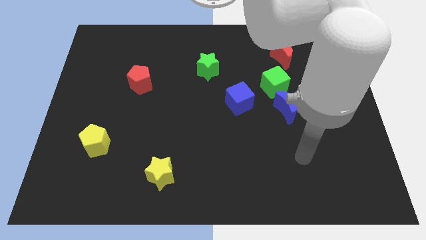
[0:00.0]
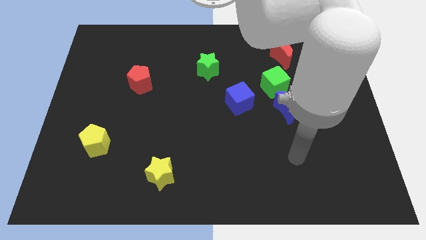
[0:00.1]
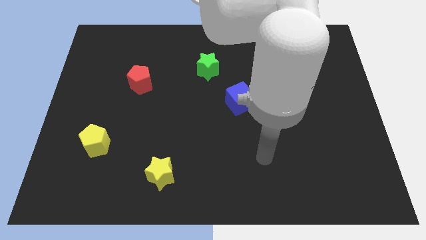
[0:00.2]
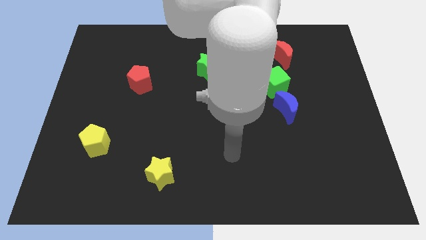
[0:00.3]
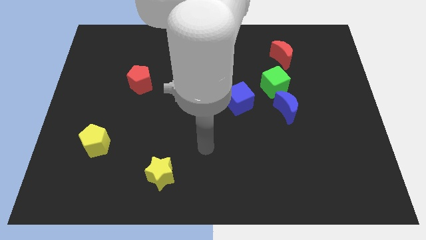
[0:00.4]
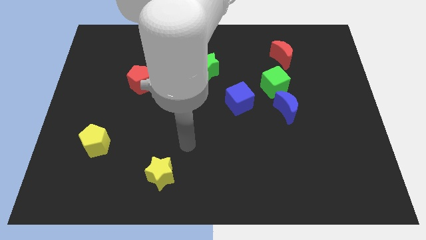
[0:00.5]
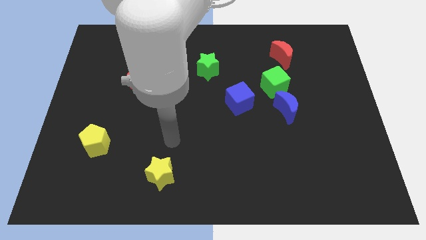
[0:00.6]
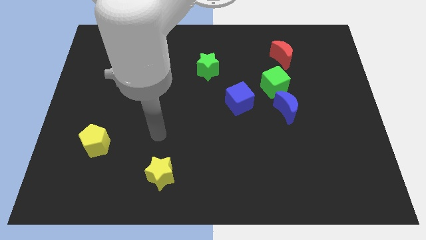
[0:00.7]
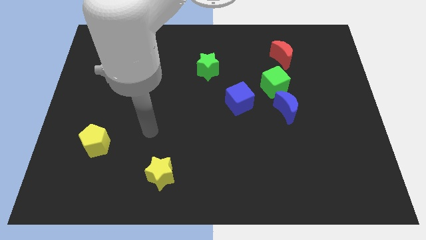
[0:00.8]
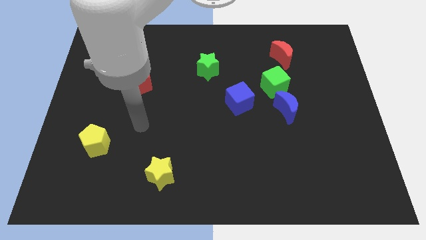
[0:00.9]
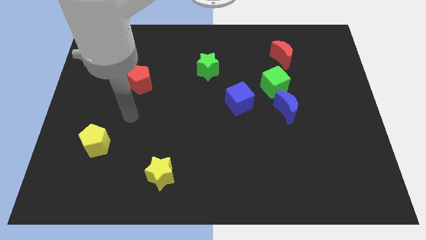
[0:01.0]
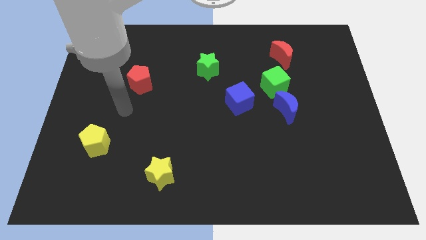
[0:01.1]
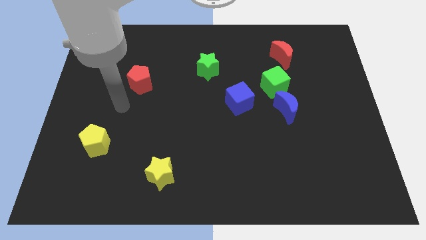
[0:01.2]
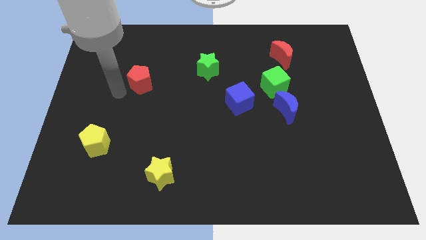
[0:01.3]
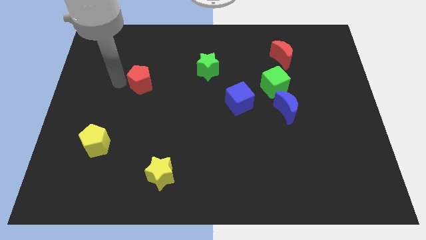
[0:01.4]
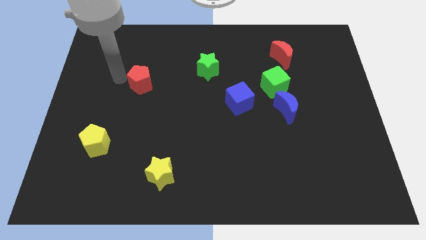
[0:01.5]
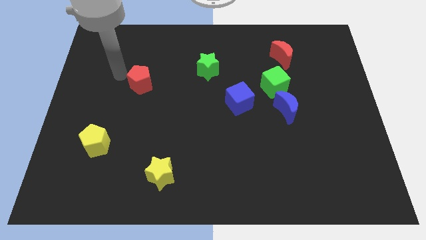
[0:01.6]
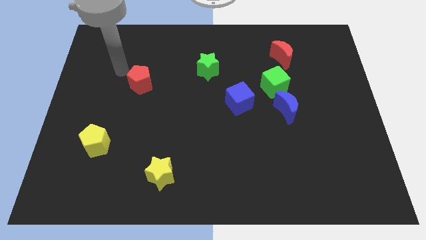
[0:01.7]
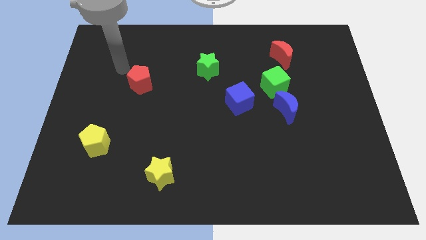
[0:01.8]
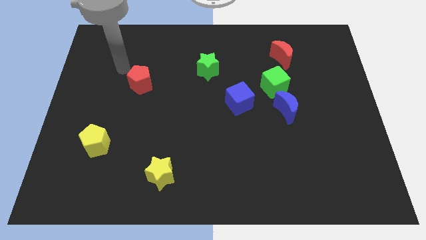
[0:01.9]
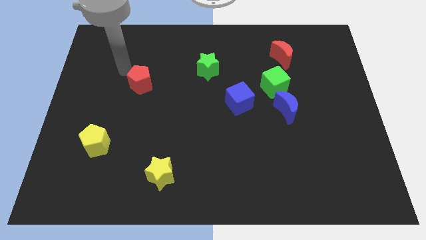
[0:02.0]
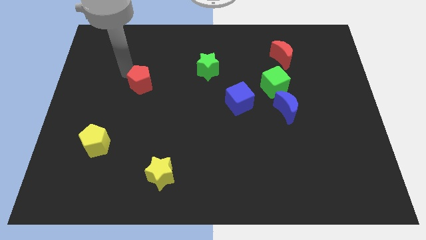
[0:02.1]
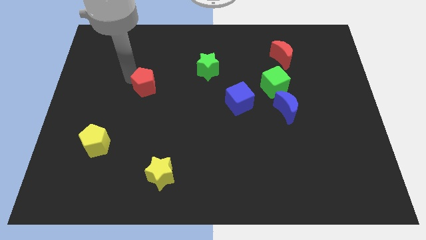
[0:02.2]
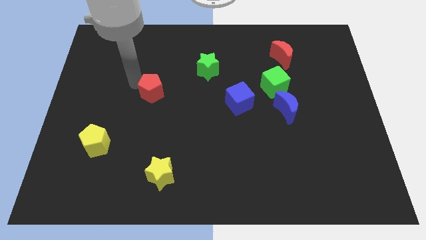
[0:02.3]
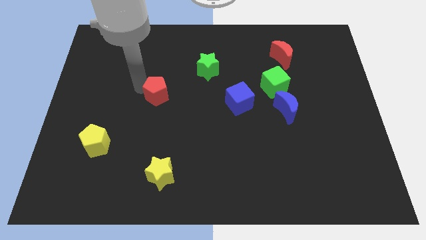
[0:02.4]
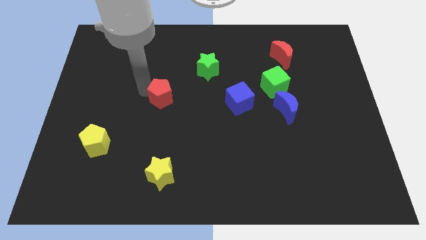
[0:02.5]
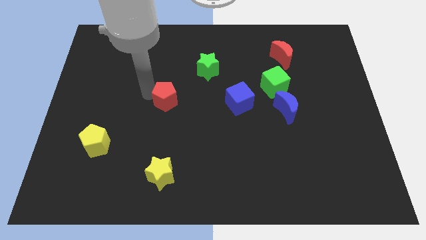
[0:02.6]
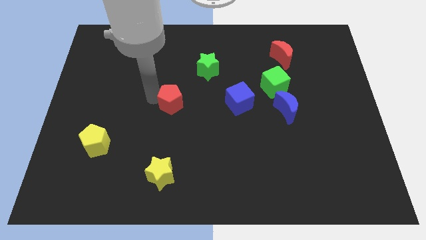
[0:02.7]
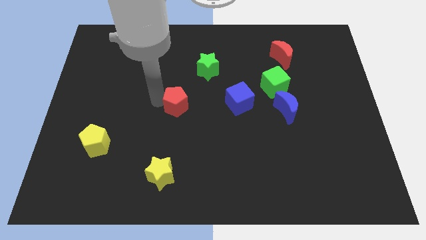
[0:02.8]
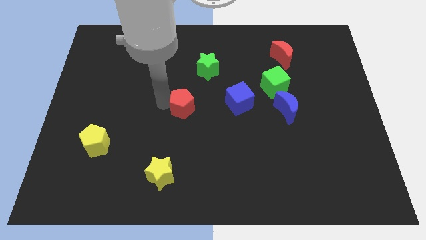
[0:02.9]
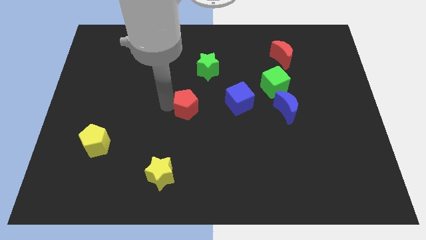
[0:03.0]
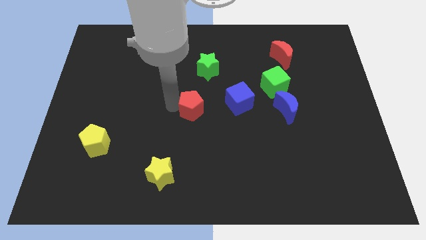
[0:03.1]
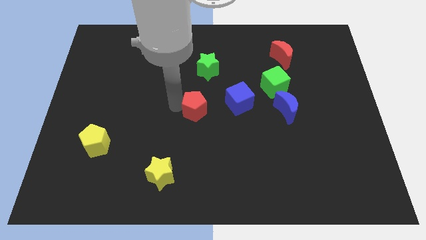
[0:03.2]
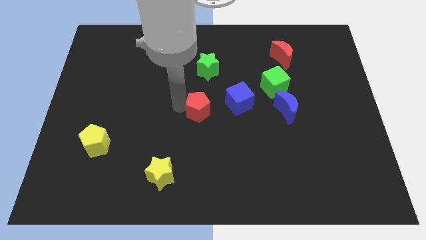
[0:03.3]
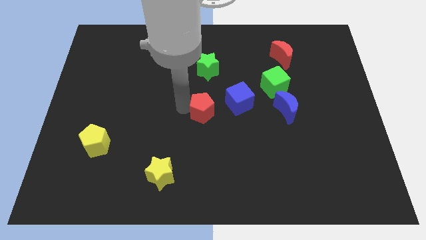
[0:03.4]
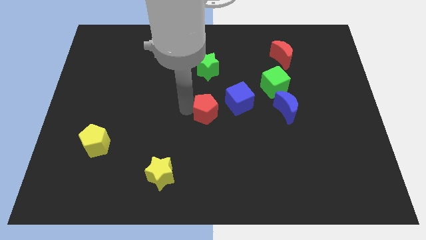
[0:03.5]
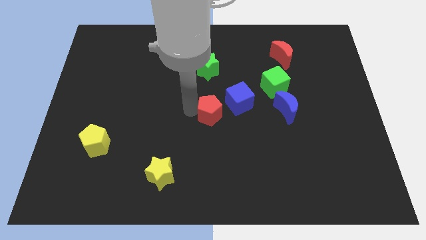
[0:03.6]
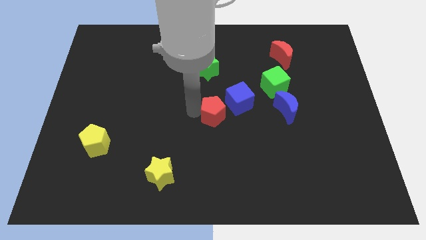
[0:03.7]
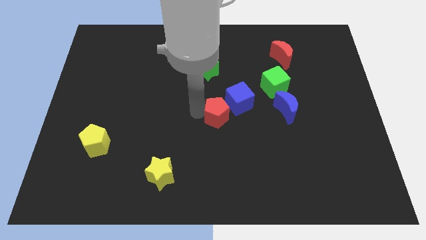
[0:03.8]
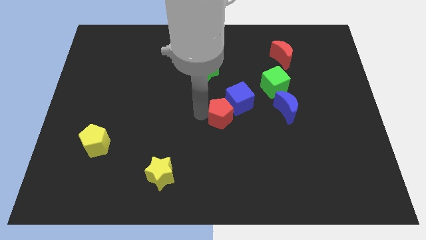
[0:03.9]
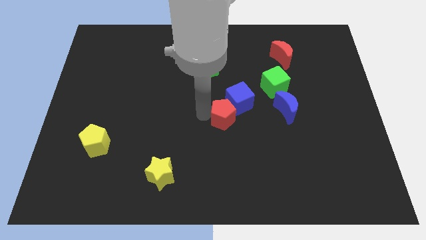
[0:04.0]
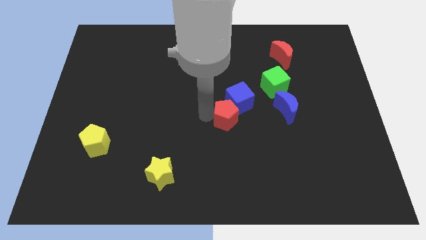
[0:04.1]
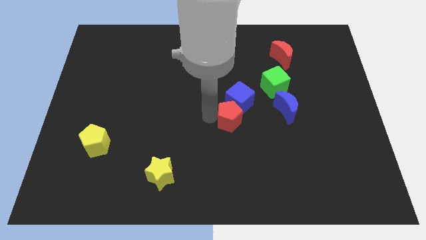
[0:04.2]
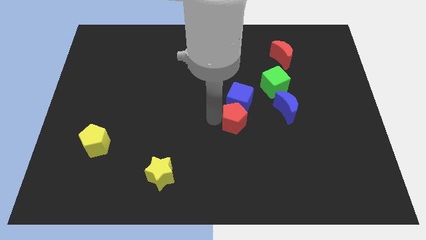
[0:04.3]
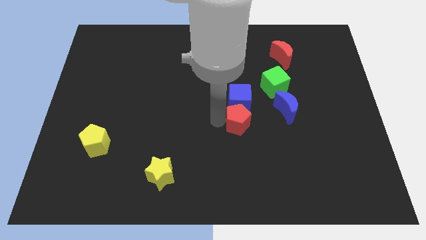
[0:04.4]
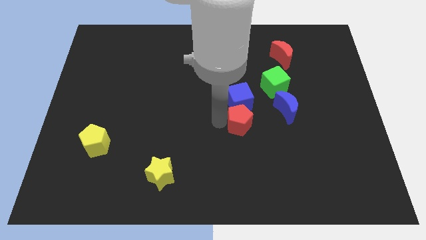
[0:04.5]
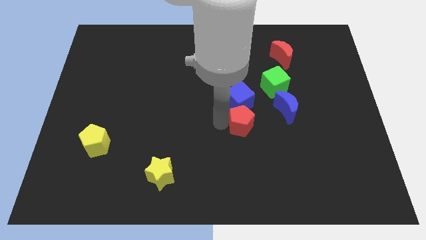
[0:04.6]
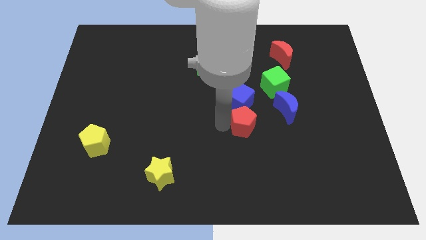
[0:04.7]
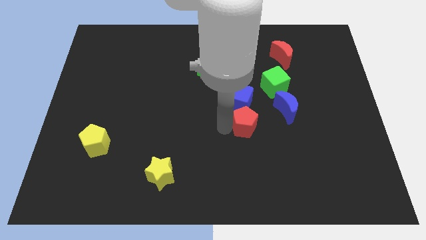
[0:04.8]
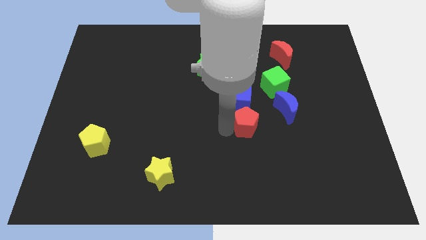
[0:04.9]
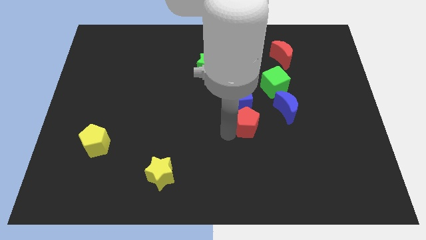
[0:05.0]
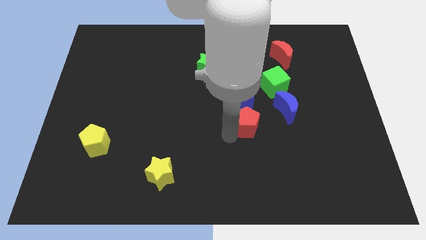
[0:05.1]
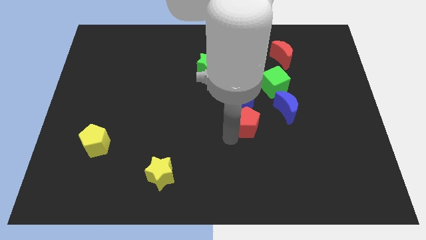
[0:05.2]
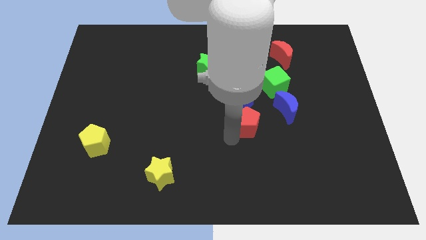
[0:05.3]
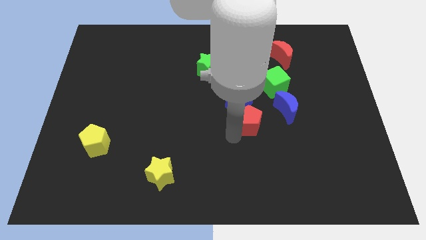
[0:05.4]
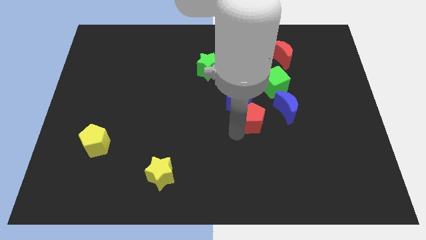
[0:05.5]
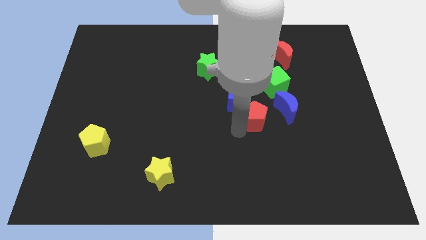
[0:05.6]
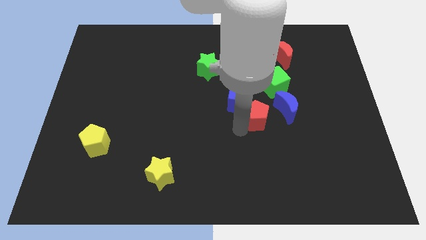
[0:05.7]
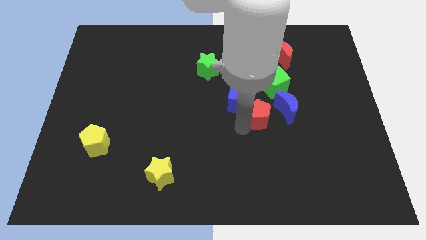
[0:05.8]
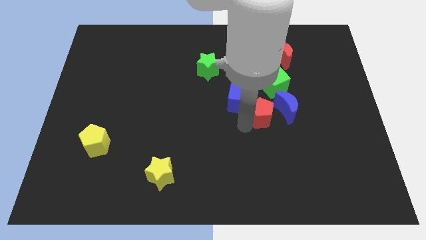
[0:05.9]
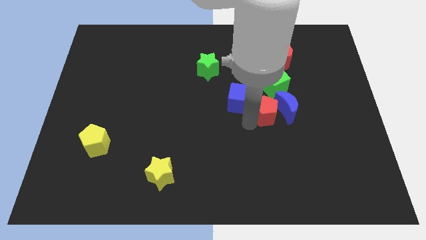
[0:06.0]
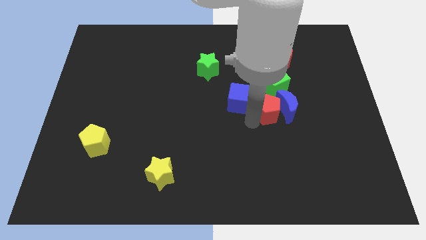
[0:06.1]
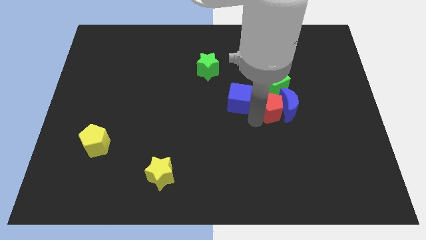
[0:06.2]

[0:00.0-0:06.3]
push the red pentagon towards the blue moon

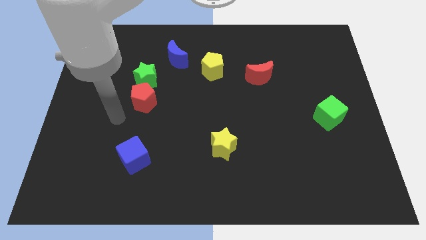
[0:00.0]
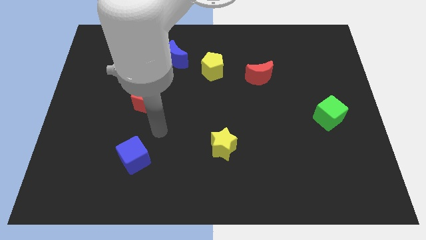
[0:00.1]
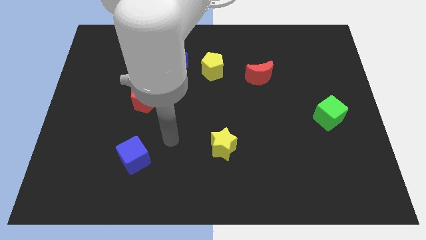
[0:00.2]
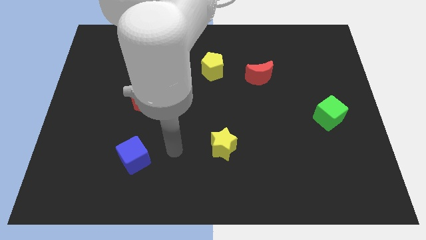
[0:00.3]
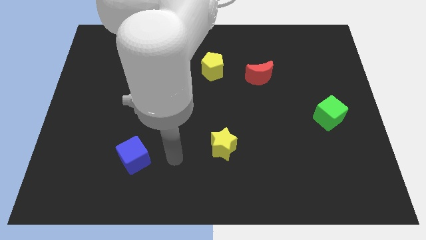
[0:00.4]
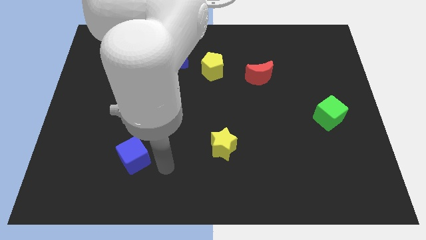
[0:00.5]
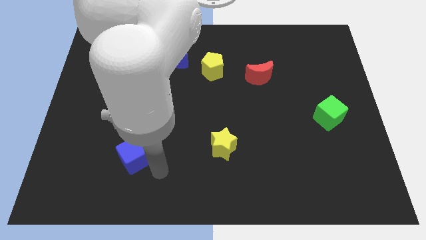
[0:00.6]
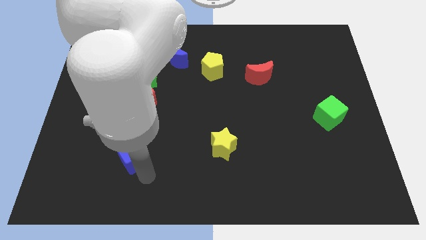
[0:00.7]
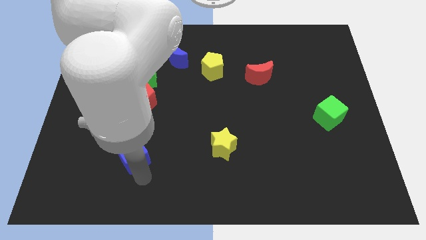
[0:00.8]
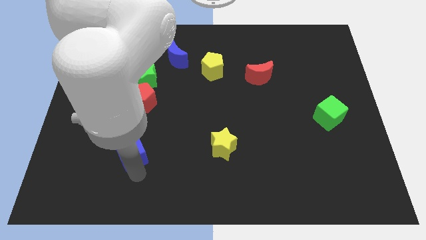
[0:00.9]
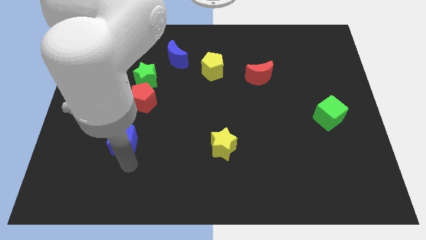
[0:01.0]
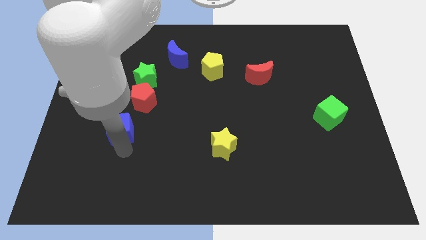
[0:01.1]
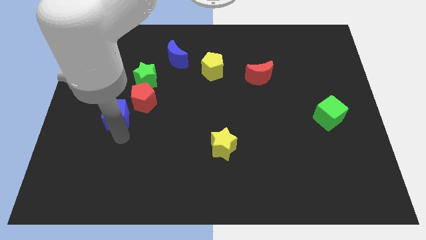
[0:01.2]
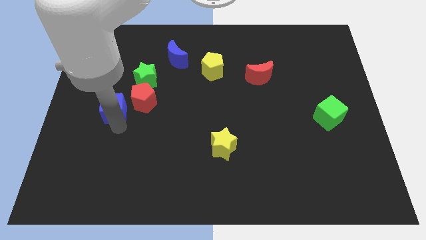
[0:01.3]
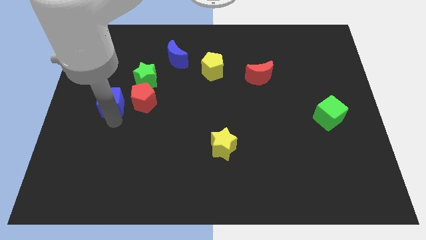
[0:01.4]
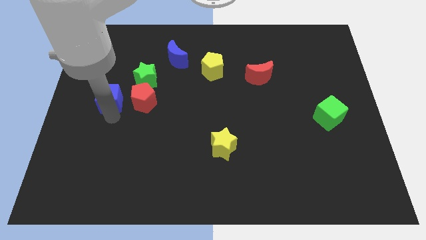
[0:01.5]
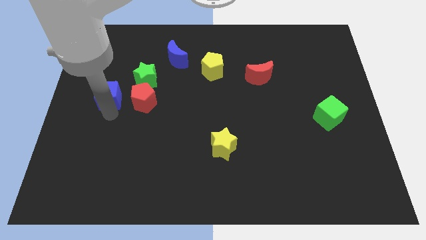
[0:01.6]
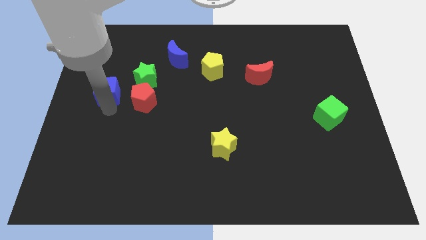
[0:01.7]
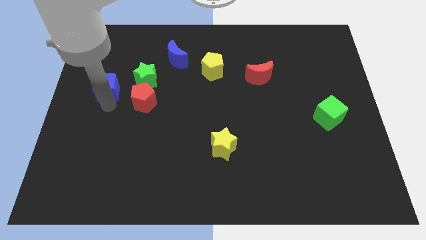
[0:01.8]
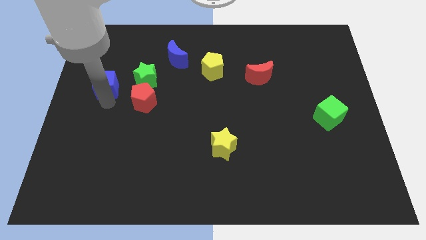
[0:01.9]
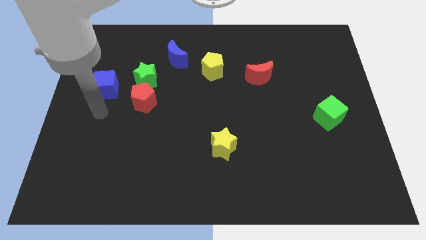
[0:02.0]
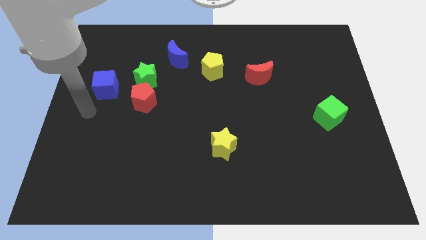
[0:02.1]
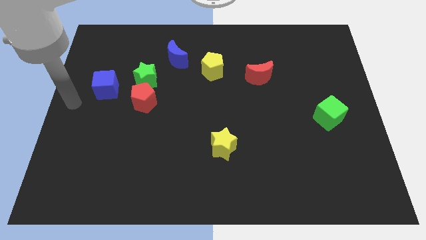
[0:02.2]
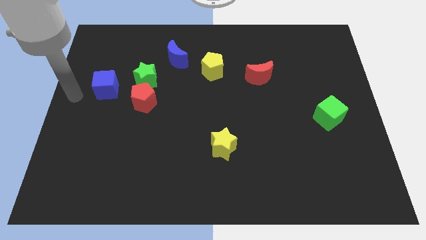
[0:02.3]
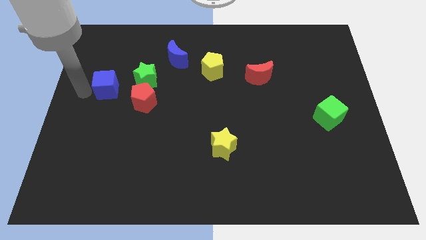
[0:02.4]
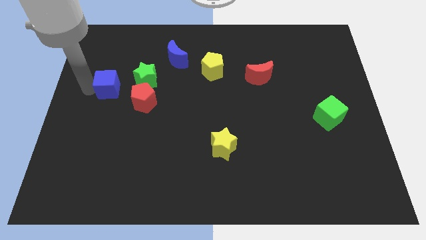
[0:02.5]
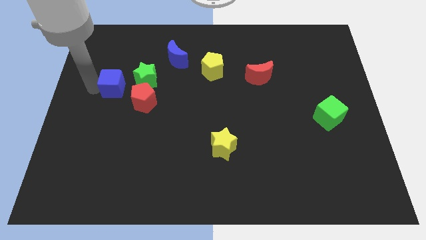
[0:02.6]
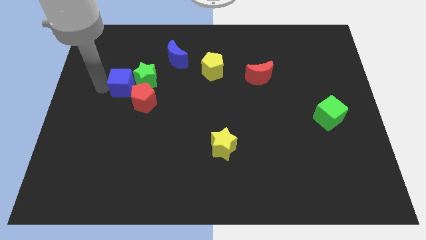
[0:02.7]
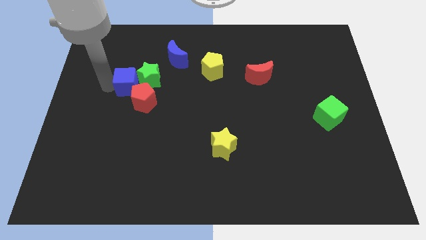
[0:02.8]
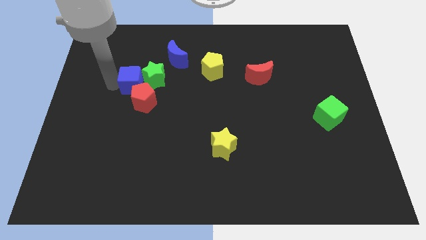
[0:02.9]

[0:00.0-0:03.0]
put the blue cube towards the green star
